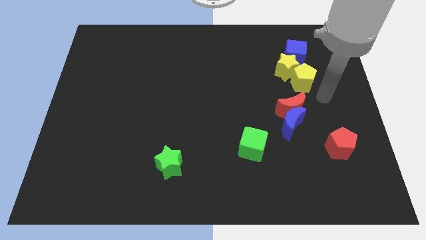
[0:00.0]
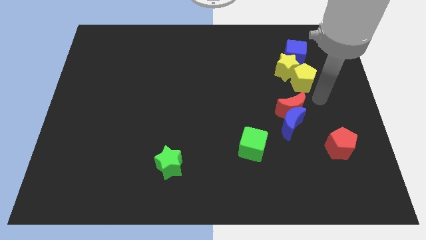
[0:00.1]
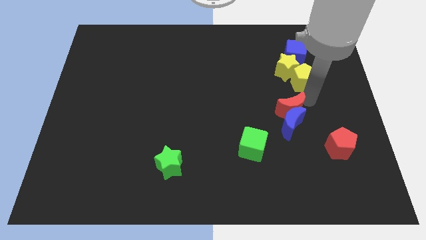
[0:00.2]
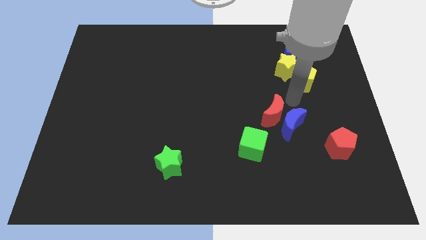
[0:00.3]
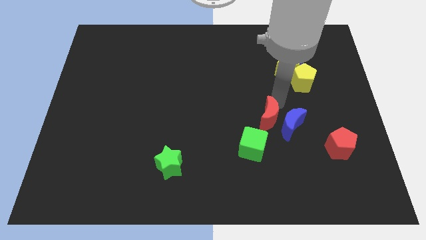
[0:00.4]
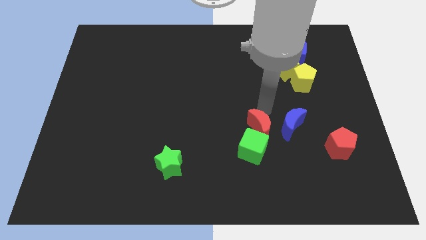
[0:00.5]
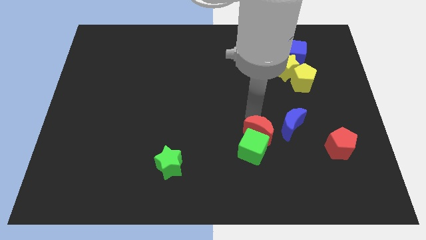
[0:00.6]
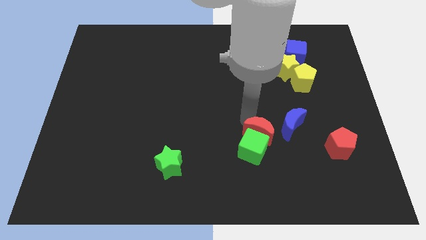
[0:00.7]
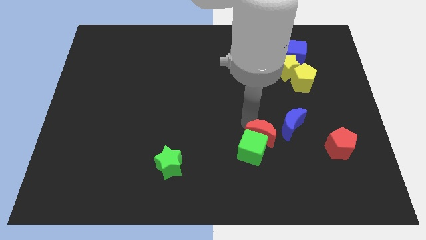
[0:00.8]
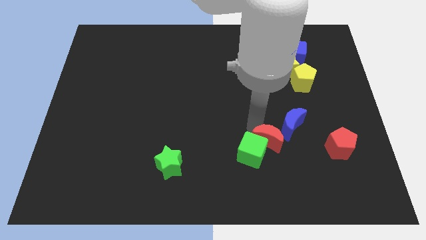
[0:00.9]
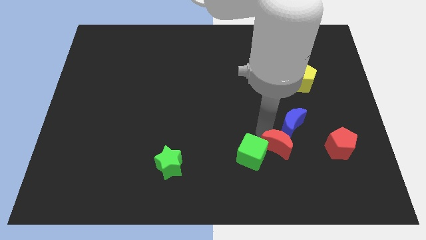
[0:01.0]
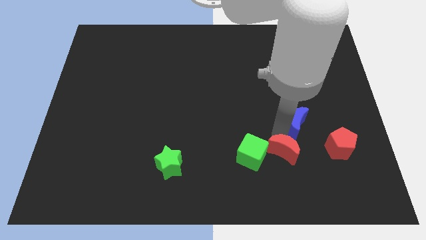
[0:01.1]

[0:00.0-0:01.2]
push the red crescent into the green cube

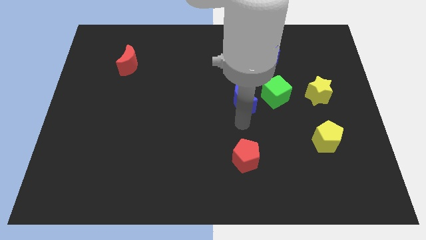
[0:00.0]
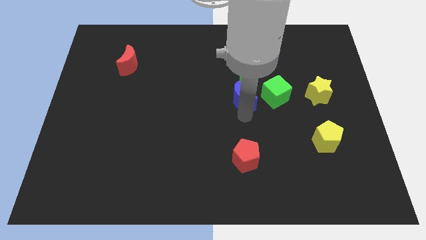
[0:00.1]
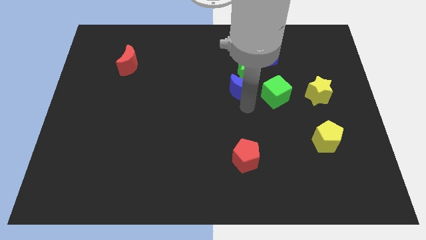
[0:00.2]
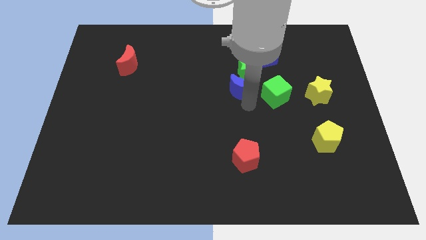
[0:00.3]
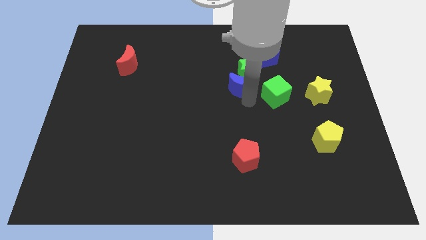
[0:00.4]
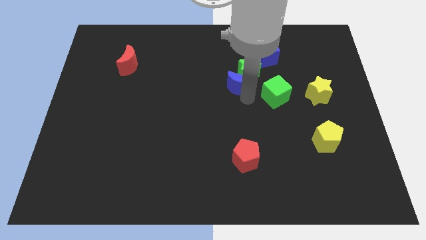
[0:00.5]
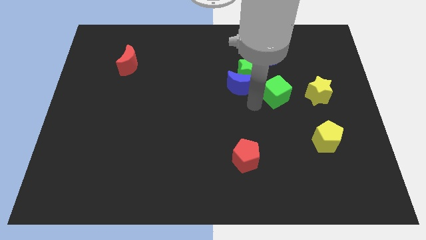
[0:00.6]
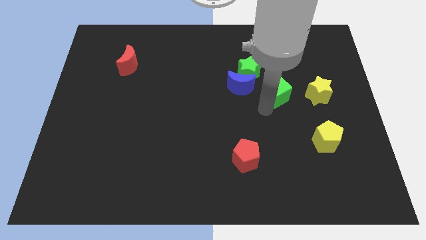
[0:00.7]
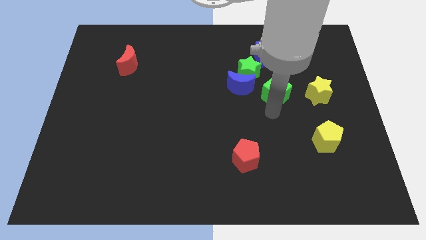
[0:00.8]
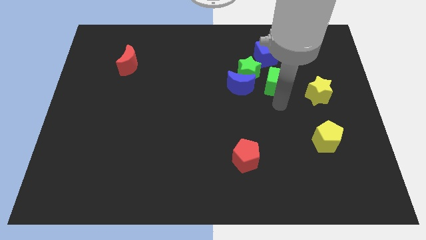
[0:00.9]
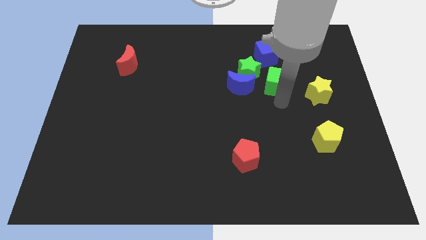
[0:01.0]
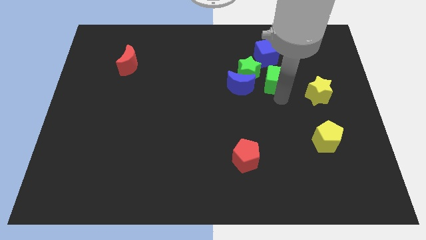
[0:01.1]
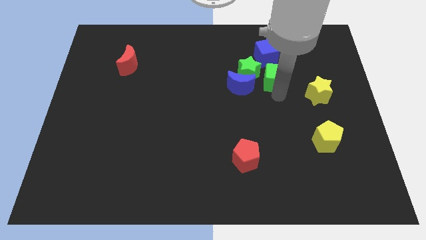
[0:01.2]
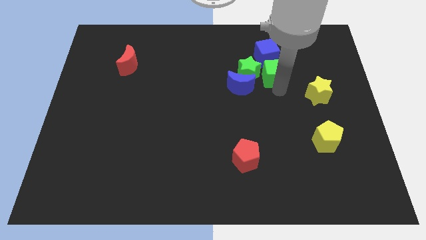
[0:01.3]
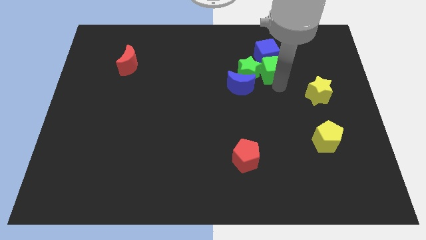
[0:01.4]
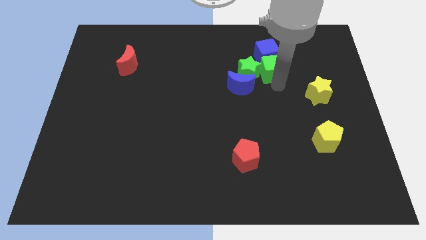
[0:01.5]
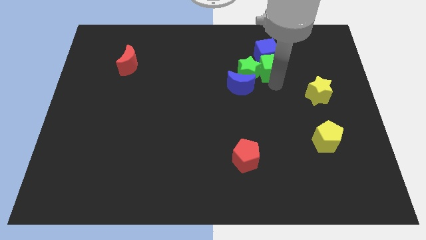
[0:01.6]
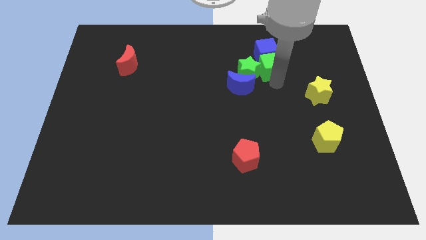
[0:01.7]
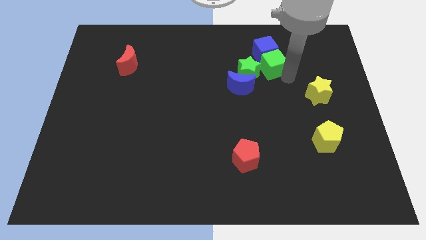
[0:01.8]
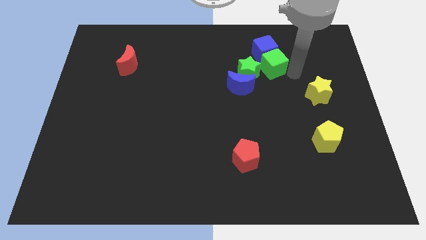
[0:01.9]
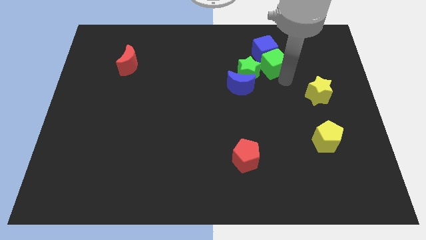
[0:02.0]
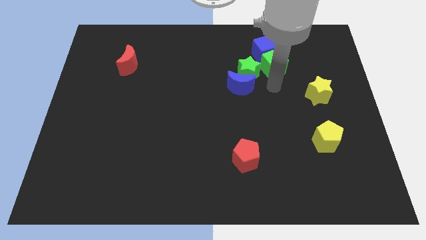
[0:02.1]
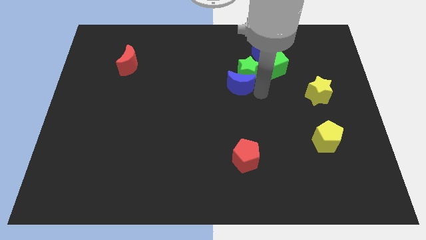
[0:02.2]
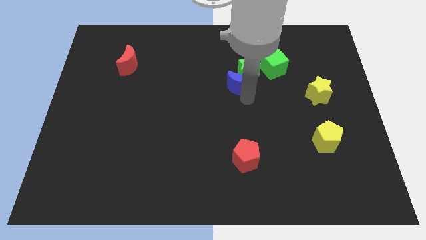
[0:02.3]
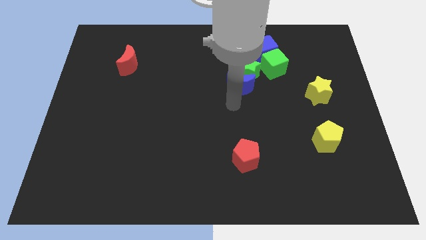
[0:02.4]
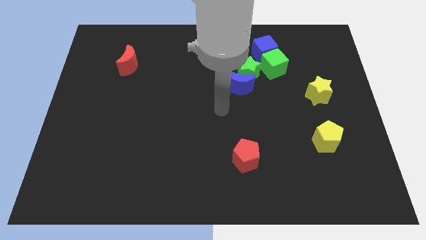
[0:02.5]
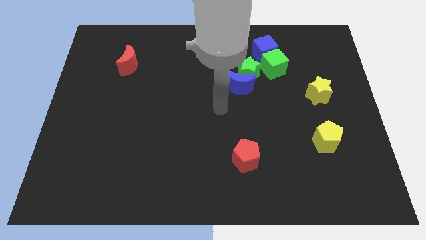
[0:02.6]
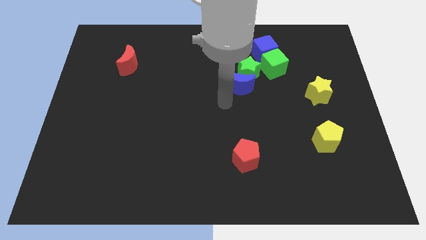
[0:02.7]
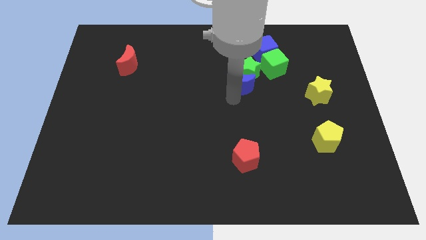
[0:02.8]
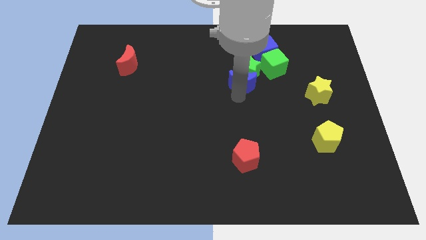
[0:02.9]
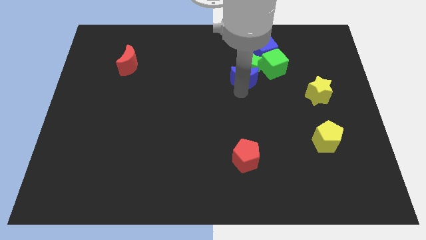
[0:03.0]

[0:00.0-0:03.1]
push the green cube into blue cube

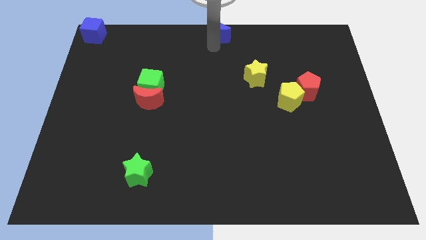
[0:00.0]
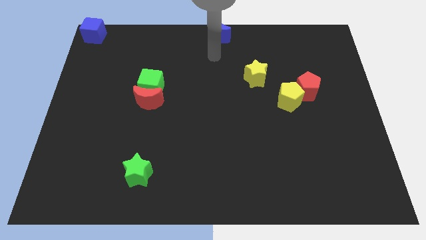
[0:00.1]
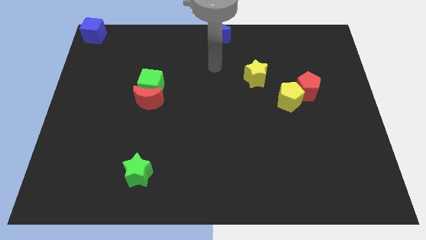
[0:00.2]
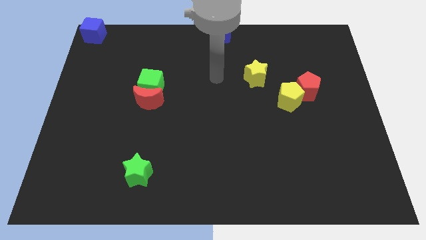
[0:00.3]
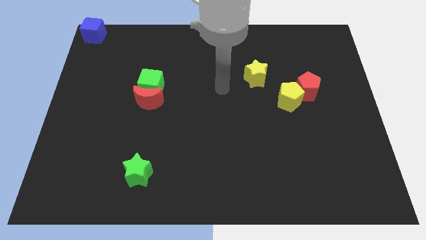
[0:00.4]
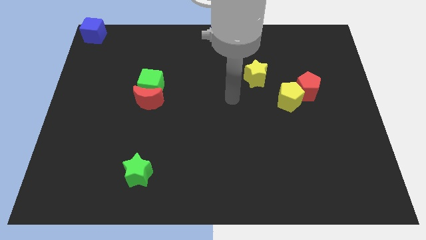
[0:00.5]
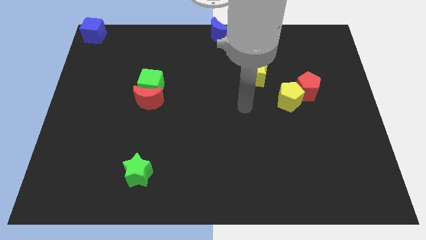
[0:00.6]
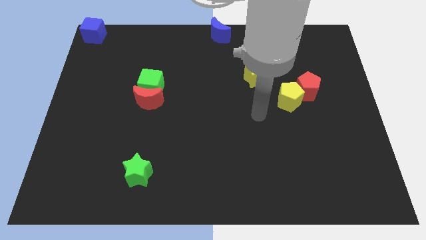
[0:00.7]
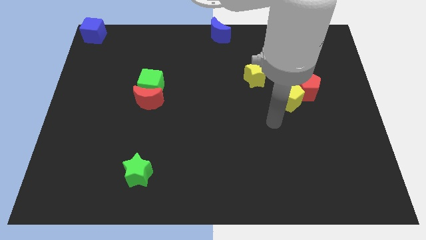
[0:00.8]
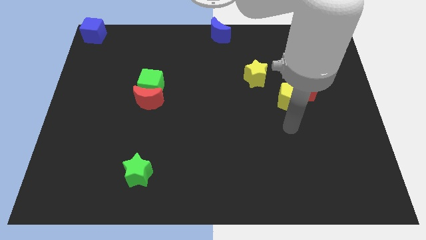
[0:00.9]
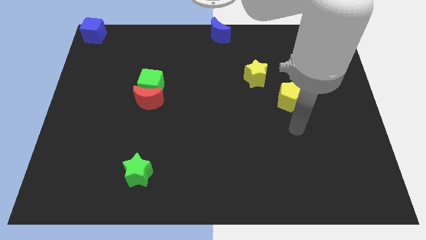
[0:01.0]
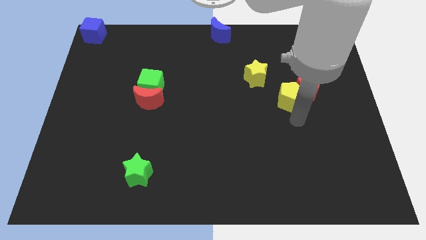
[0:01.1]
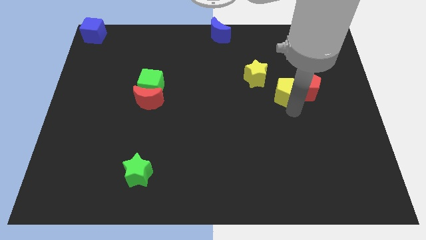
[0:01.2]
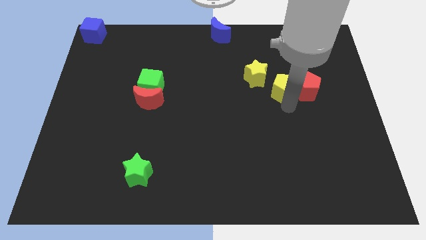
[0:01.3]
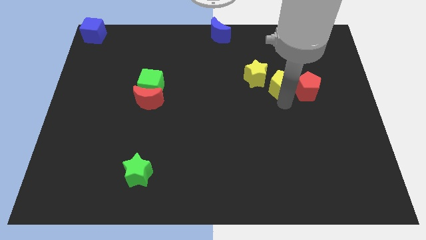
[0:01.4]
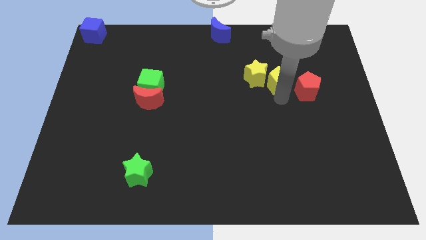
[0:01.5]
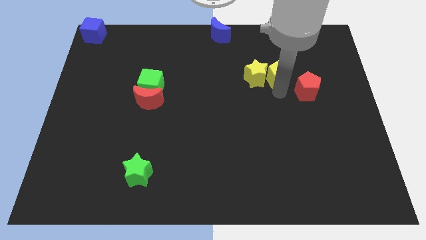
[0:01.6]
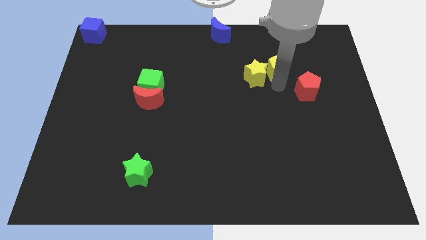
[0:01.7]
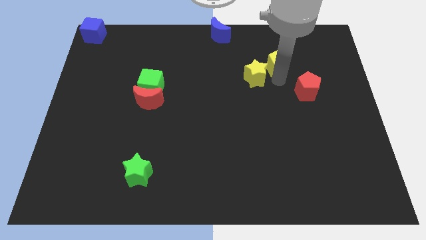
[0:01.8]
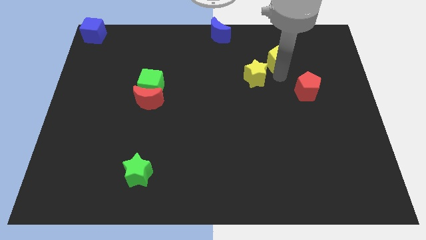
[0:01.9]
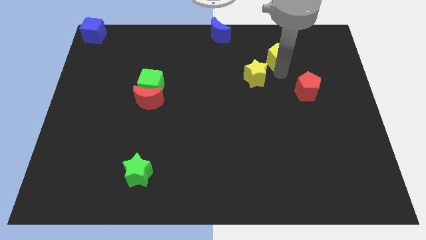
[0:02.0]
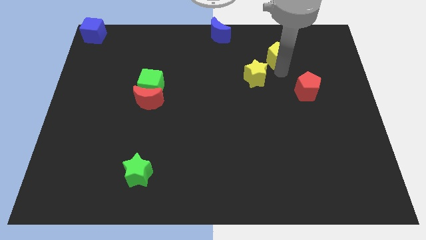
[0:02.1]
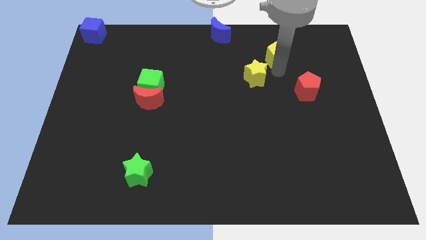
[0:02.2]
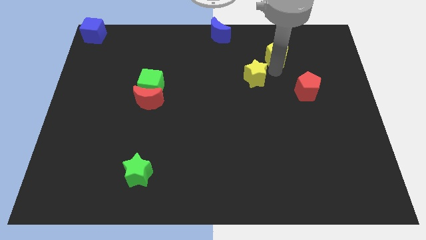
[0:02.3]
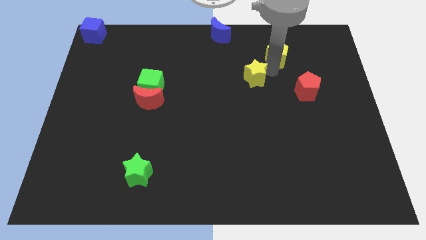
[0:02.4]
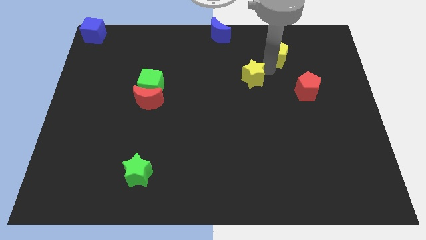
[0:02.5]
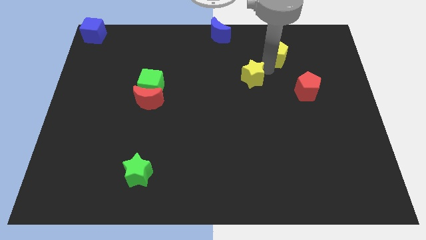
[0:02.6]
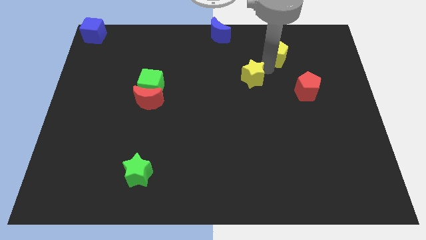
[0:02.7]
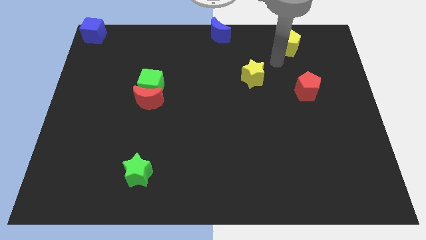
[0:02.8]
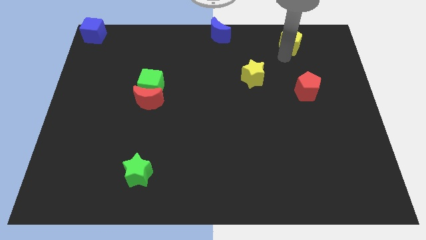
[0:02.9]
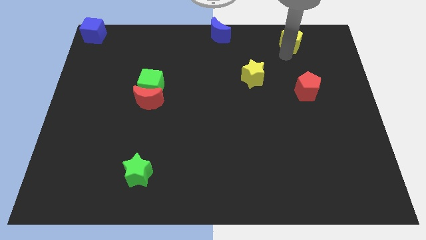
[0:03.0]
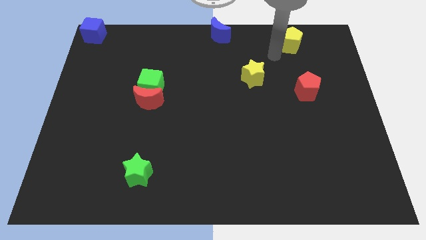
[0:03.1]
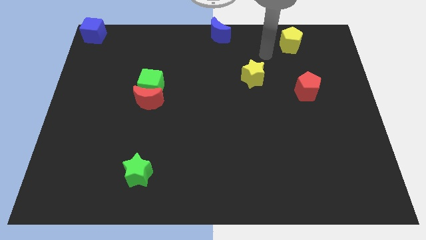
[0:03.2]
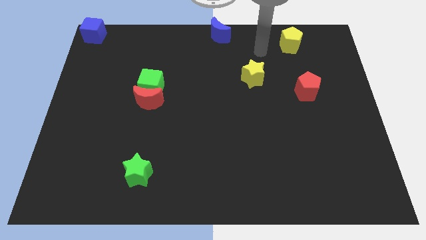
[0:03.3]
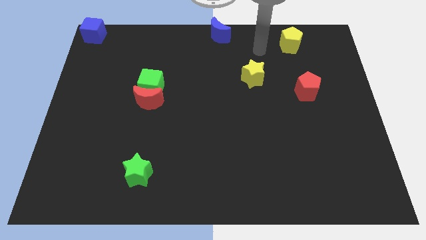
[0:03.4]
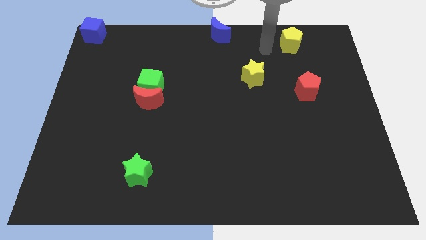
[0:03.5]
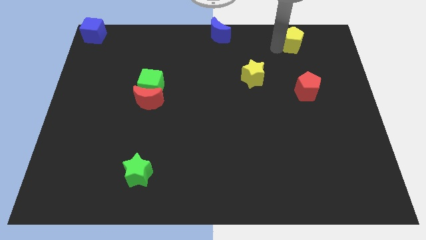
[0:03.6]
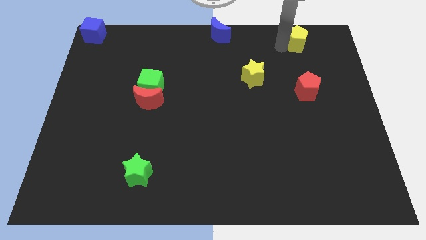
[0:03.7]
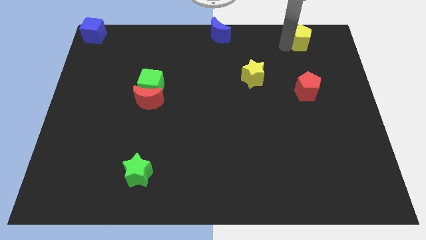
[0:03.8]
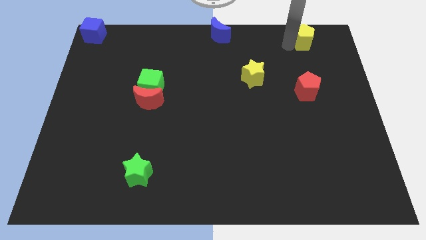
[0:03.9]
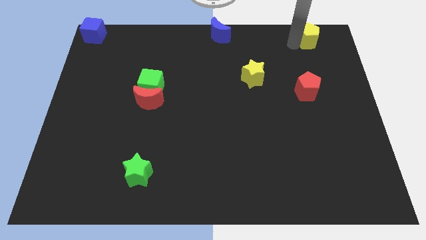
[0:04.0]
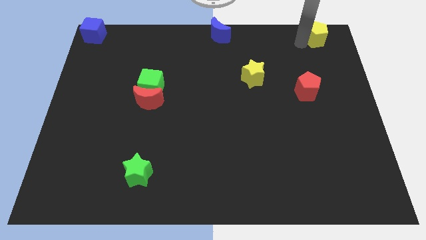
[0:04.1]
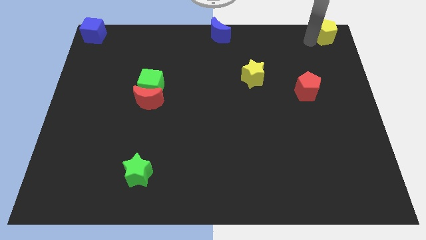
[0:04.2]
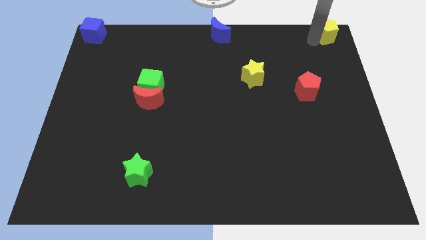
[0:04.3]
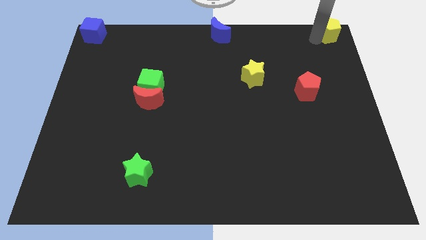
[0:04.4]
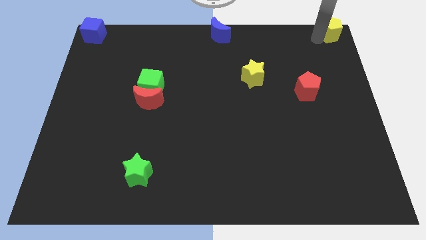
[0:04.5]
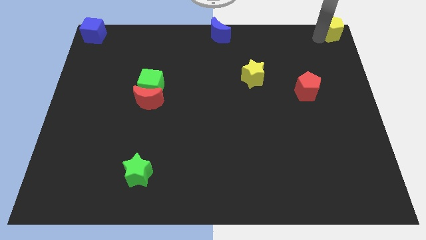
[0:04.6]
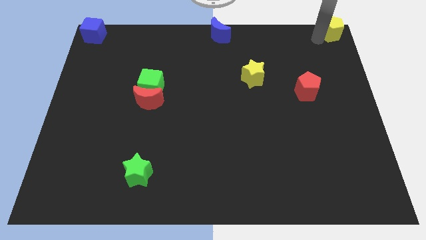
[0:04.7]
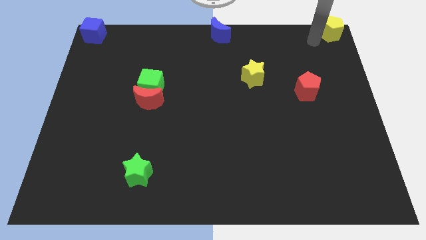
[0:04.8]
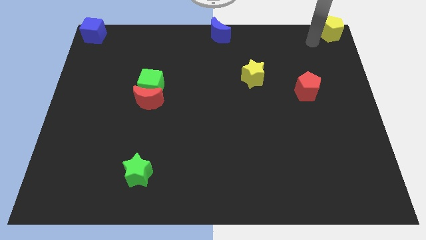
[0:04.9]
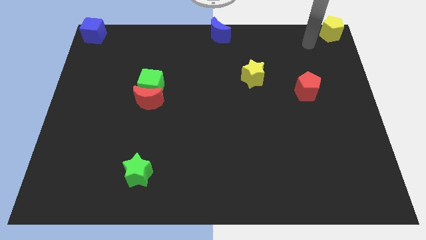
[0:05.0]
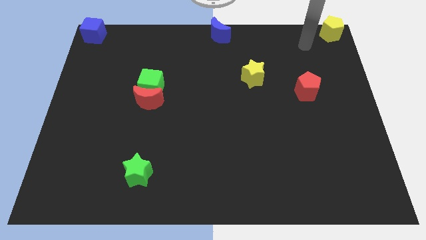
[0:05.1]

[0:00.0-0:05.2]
push the yellow pentagon to the top right corner of the board
